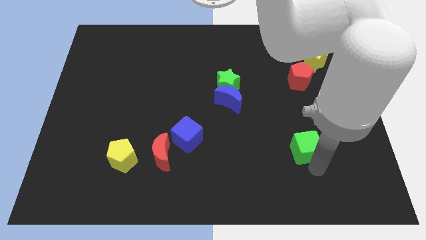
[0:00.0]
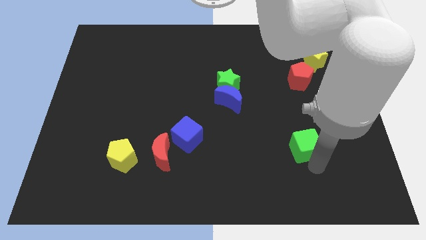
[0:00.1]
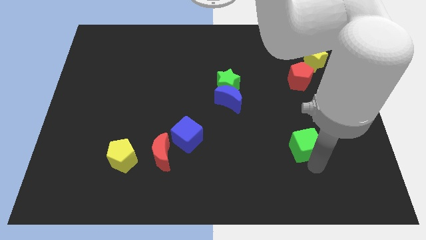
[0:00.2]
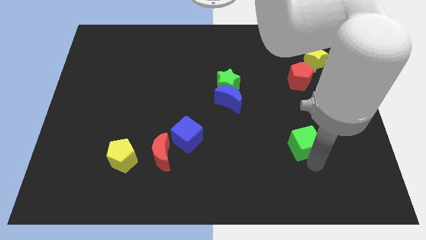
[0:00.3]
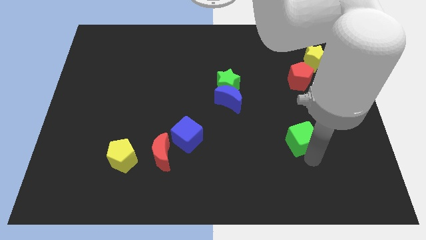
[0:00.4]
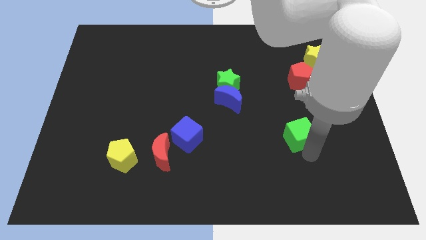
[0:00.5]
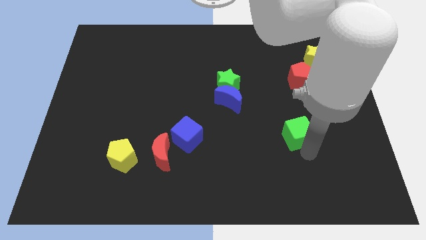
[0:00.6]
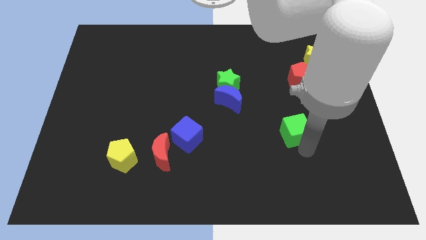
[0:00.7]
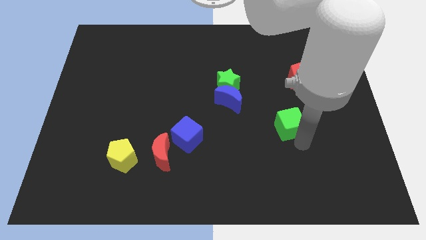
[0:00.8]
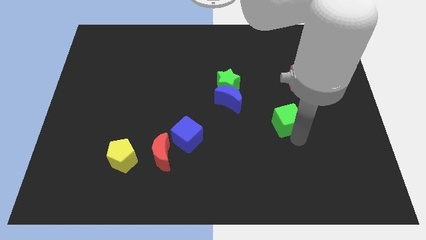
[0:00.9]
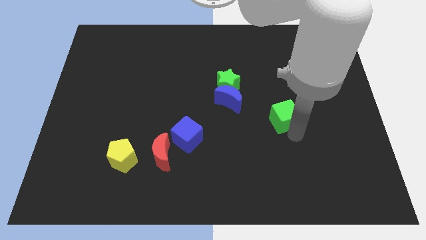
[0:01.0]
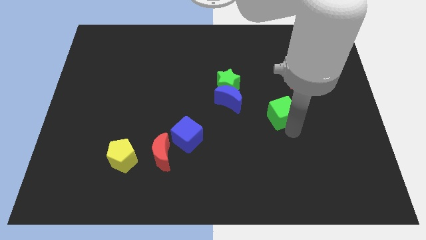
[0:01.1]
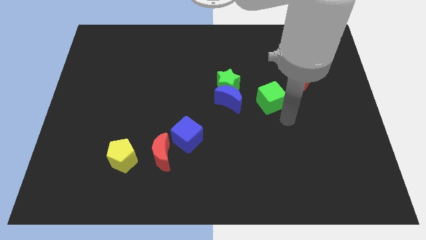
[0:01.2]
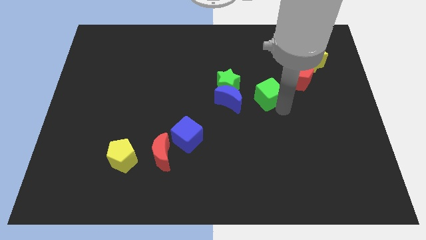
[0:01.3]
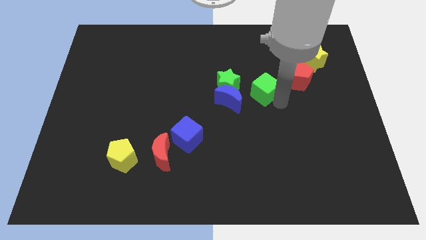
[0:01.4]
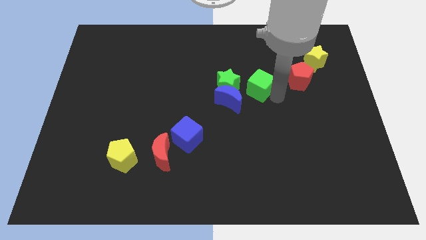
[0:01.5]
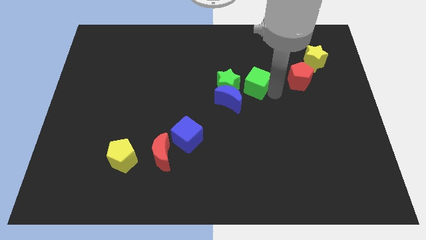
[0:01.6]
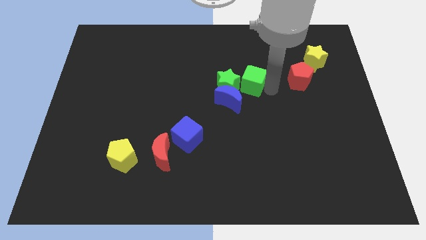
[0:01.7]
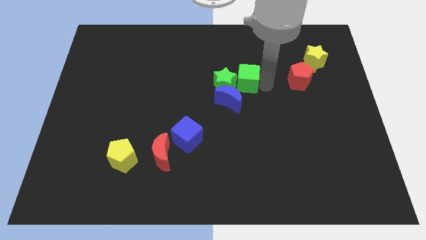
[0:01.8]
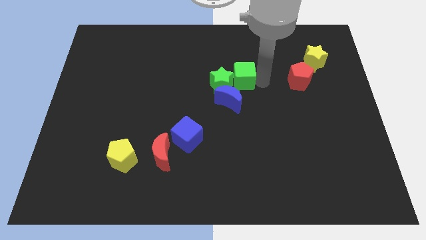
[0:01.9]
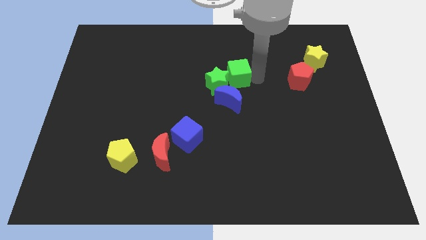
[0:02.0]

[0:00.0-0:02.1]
push green cube into green star

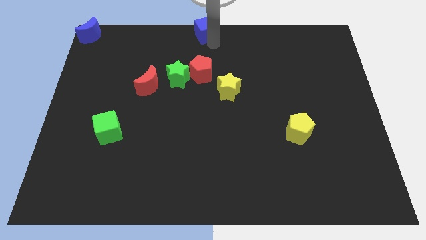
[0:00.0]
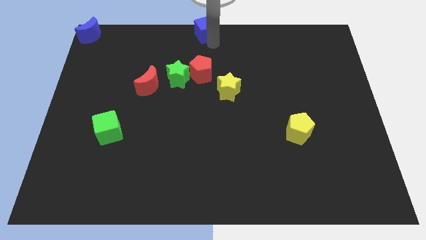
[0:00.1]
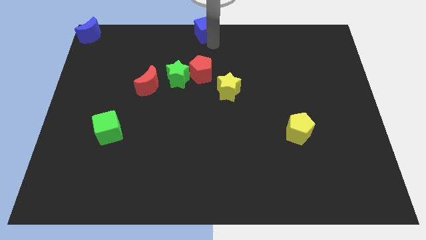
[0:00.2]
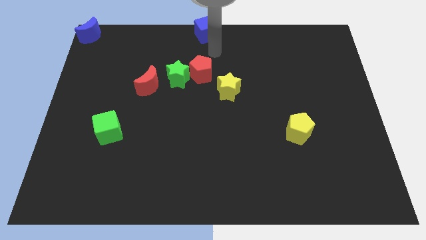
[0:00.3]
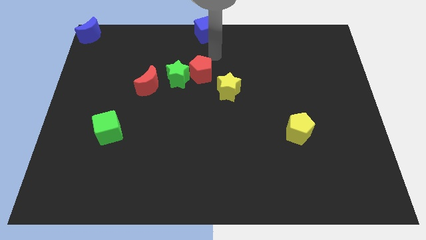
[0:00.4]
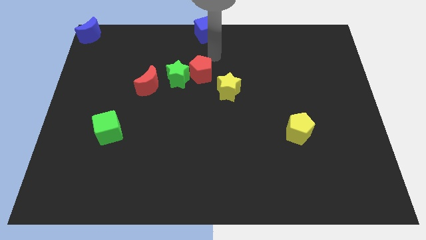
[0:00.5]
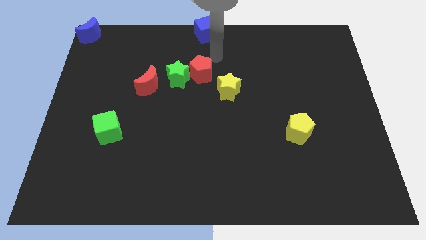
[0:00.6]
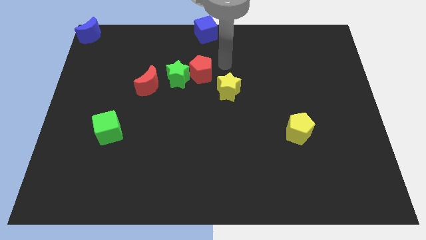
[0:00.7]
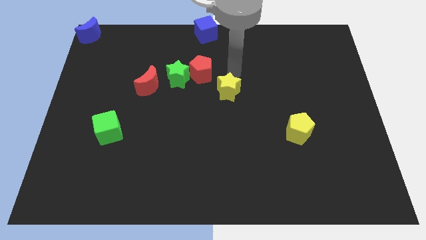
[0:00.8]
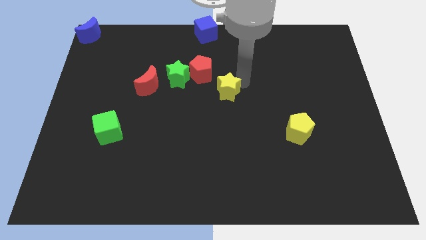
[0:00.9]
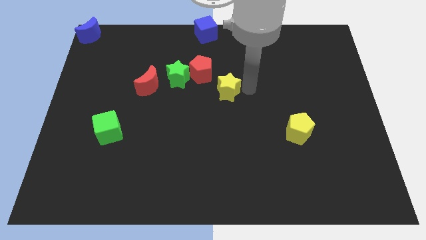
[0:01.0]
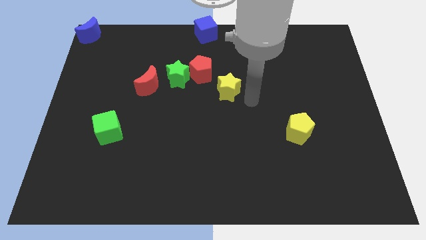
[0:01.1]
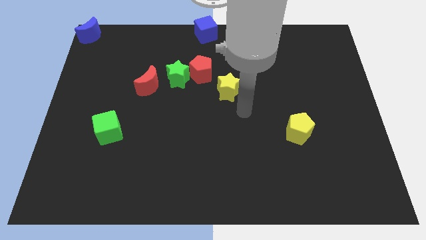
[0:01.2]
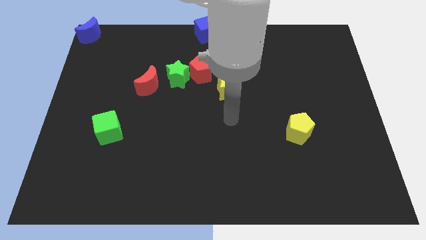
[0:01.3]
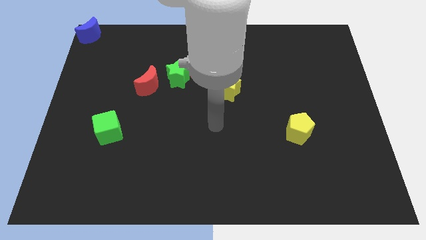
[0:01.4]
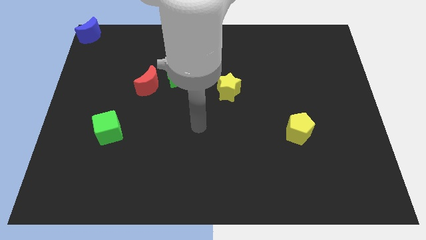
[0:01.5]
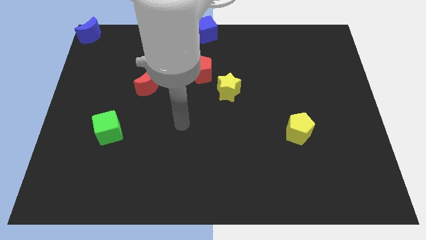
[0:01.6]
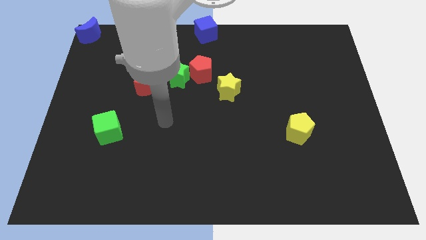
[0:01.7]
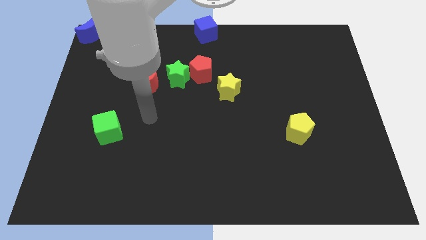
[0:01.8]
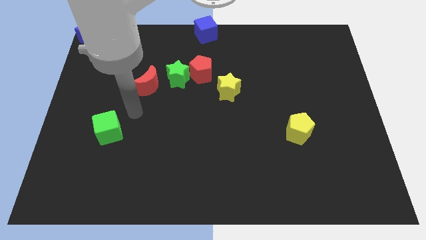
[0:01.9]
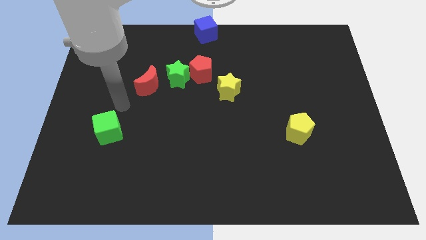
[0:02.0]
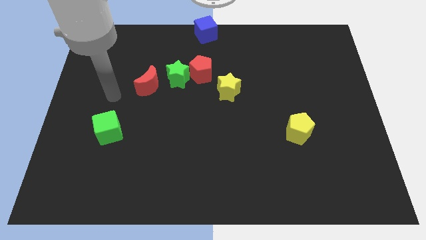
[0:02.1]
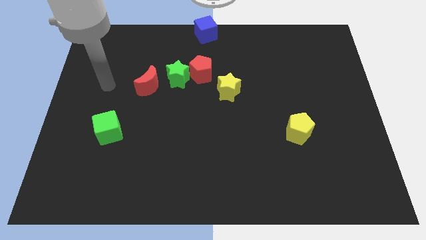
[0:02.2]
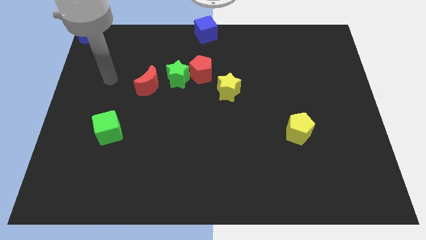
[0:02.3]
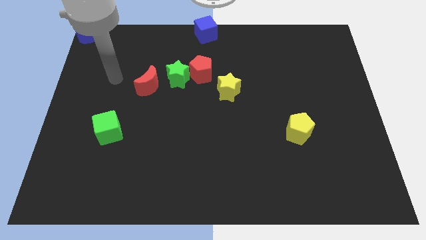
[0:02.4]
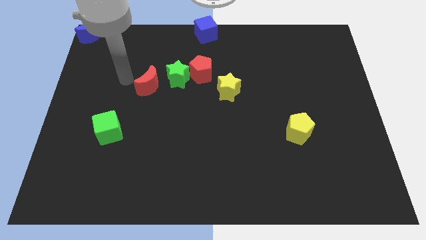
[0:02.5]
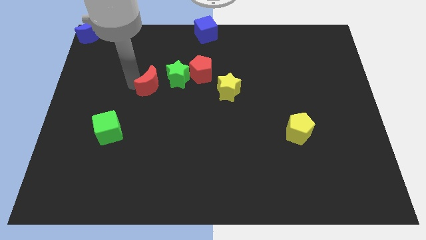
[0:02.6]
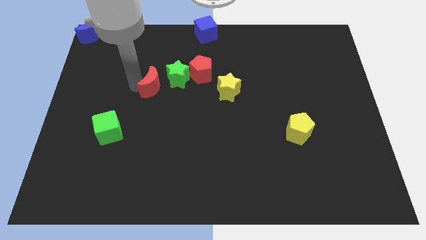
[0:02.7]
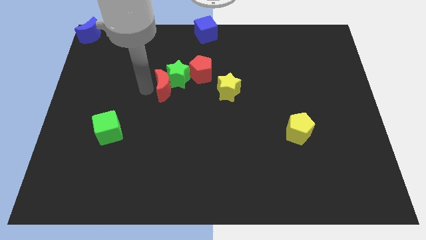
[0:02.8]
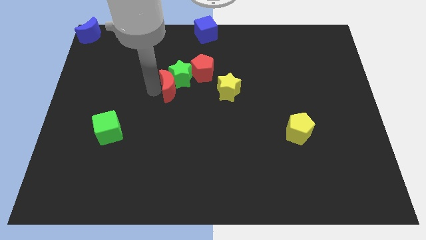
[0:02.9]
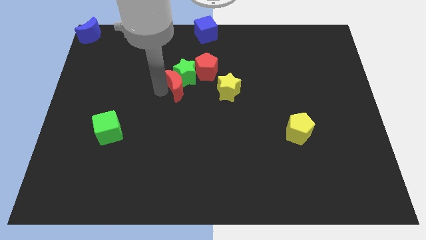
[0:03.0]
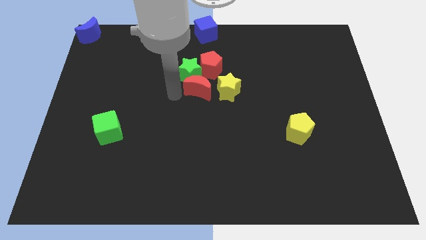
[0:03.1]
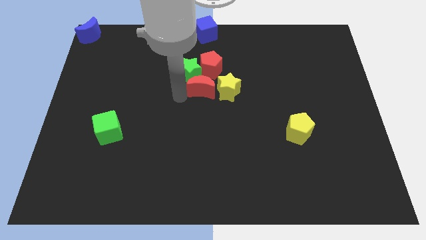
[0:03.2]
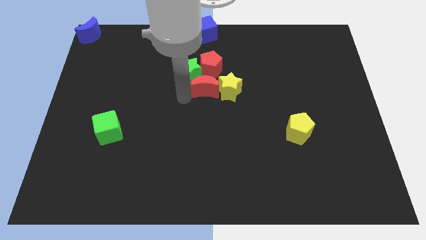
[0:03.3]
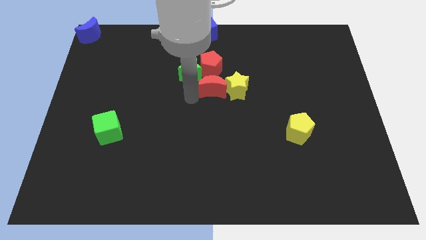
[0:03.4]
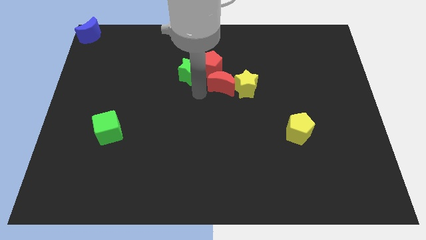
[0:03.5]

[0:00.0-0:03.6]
push the red crescent to the left of the yellow star

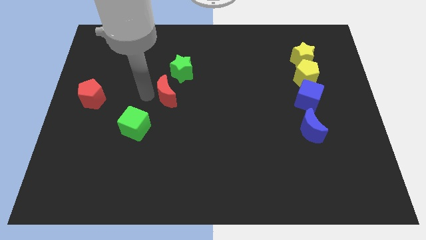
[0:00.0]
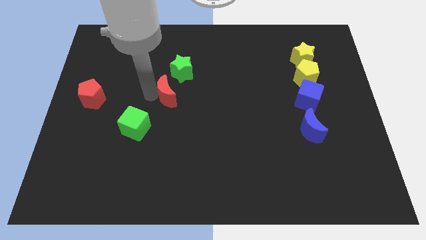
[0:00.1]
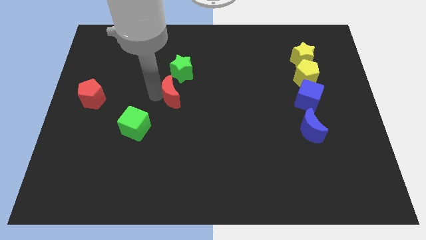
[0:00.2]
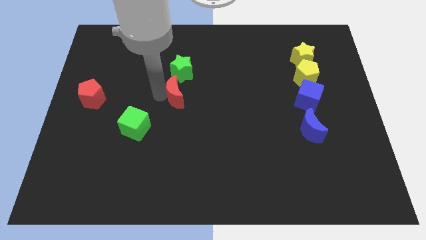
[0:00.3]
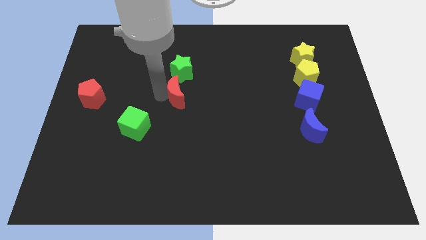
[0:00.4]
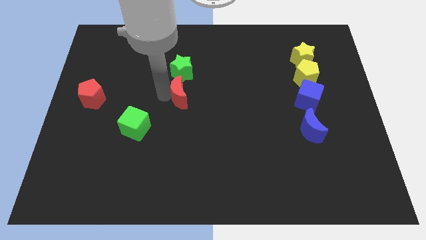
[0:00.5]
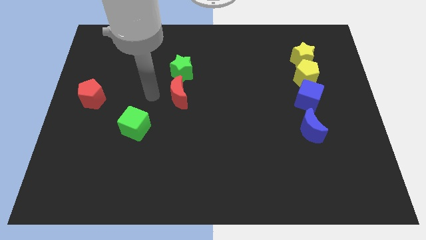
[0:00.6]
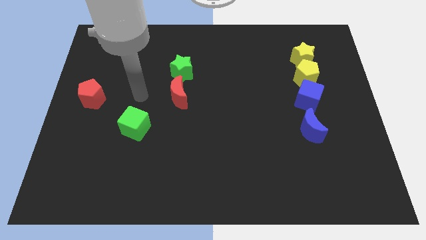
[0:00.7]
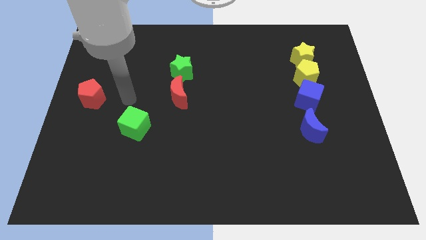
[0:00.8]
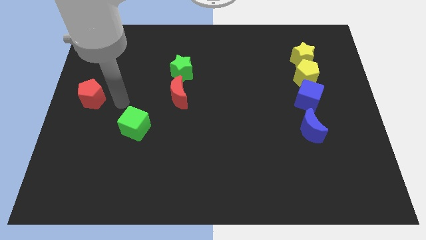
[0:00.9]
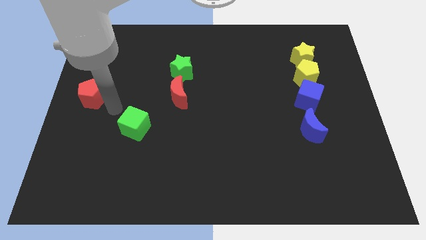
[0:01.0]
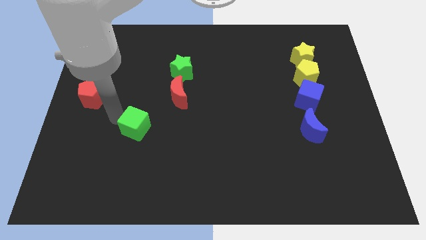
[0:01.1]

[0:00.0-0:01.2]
place red moon below the green star

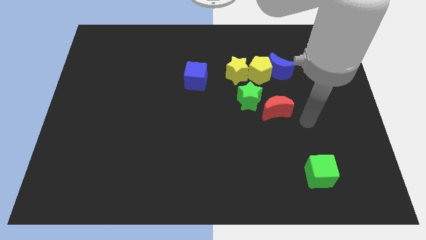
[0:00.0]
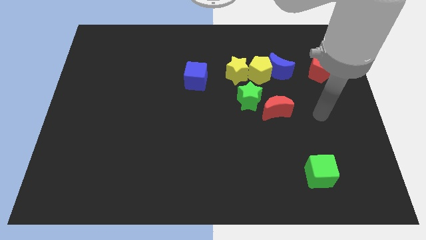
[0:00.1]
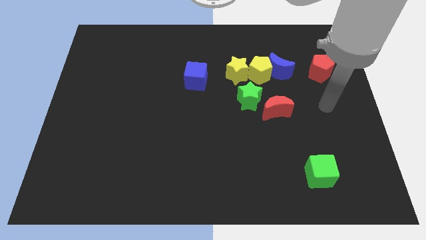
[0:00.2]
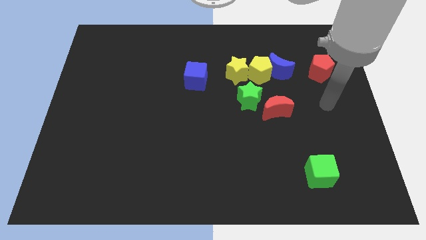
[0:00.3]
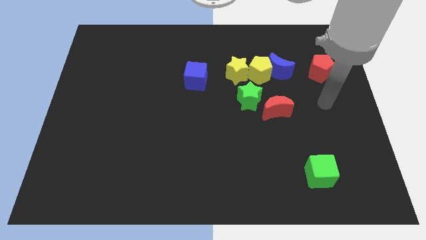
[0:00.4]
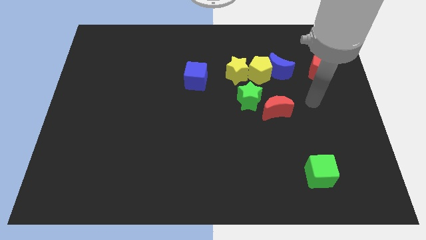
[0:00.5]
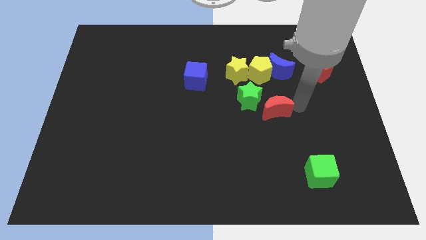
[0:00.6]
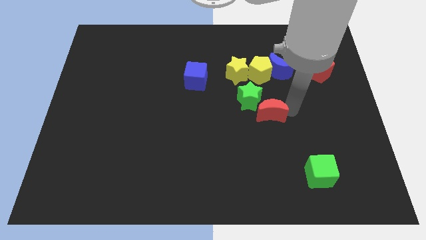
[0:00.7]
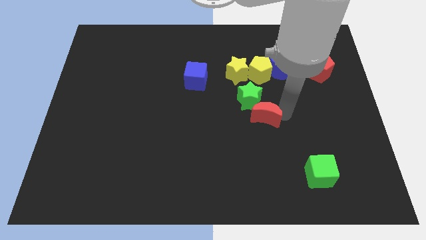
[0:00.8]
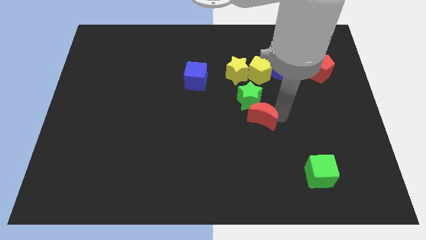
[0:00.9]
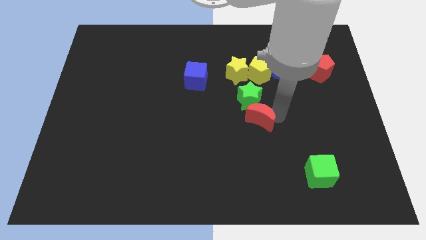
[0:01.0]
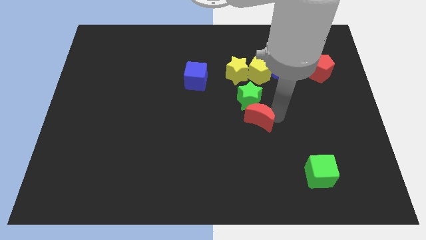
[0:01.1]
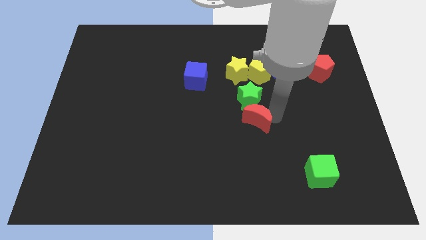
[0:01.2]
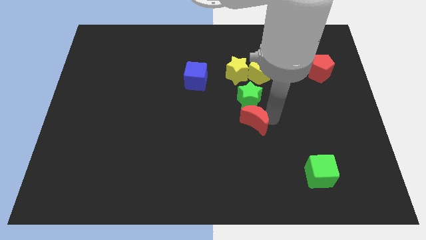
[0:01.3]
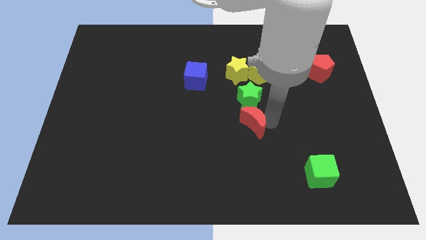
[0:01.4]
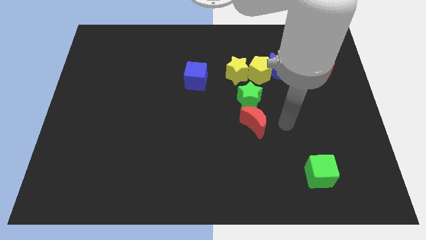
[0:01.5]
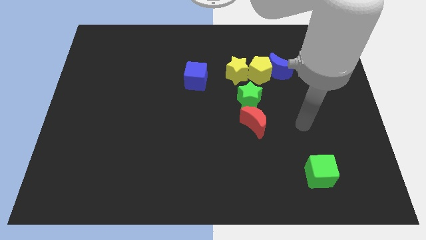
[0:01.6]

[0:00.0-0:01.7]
move the red crescent below the green star

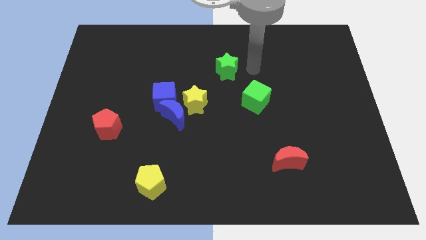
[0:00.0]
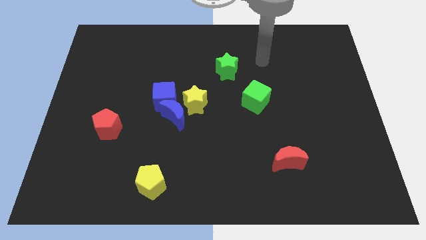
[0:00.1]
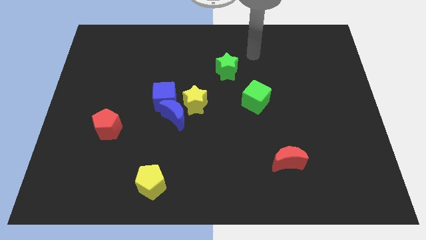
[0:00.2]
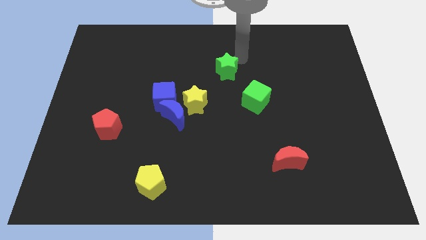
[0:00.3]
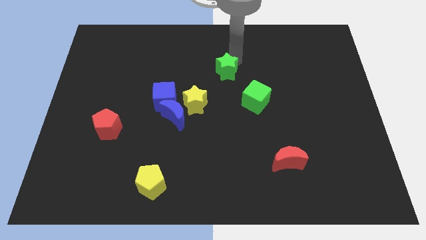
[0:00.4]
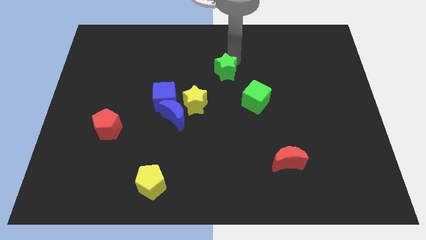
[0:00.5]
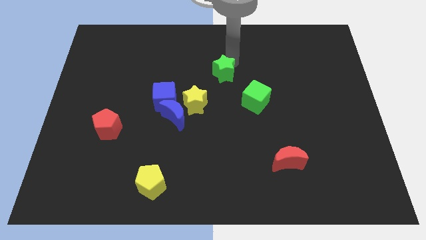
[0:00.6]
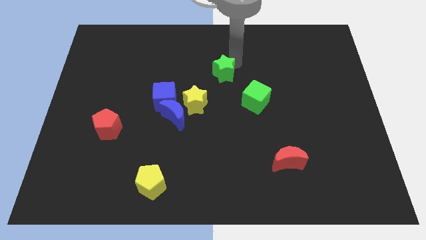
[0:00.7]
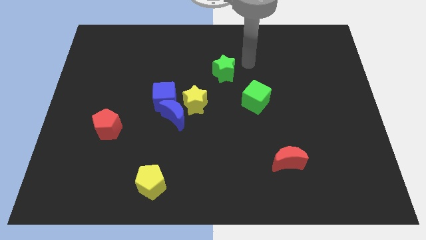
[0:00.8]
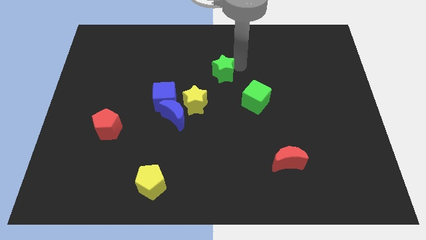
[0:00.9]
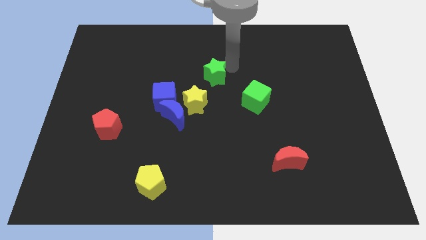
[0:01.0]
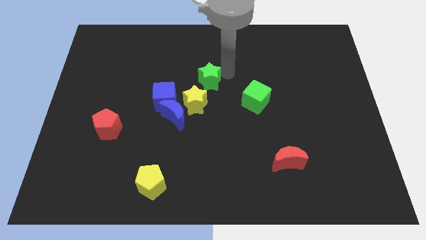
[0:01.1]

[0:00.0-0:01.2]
place the green star to the top right of yellow star
